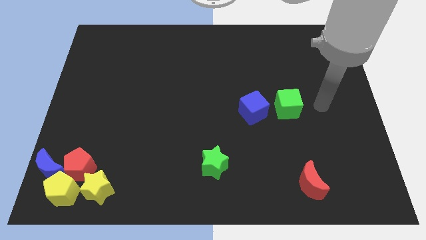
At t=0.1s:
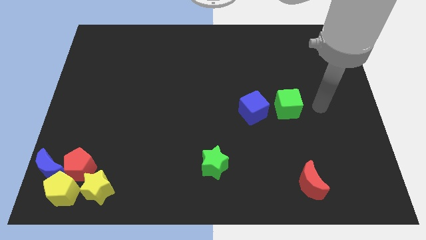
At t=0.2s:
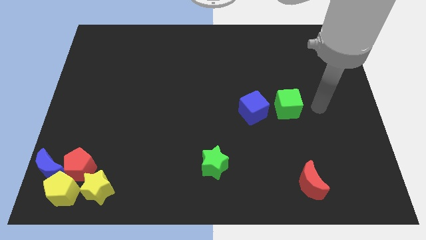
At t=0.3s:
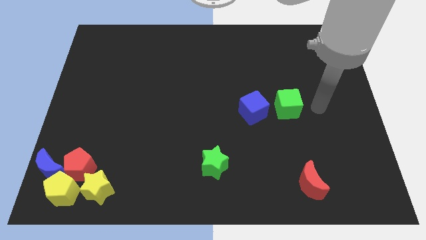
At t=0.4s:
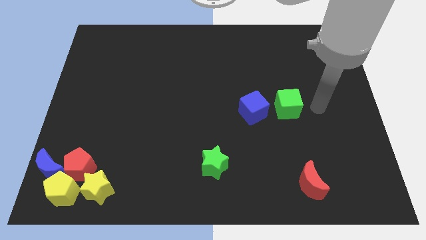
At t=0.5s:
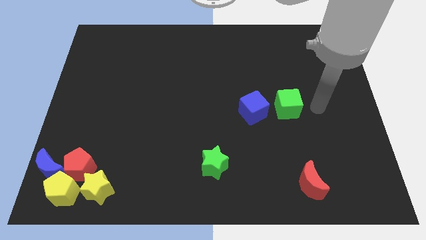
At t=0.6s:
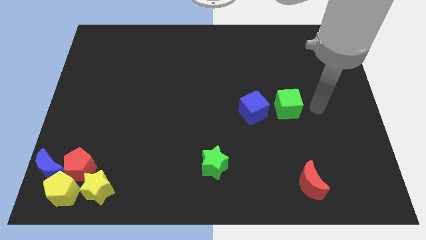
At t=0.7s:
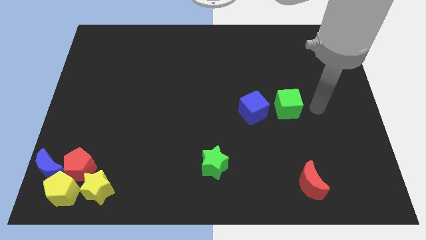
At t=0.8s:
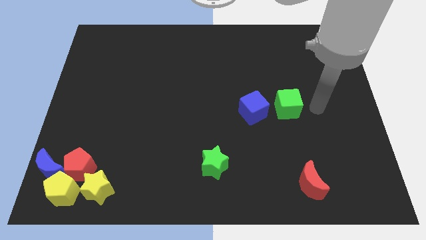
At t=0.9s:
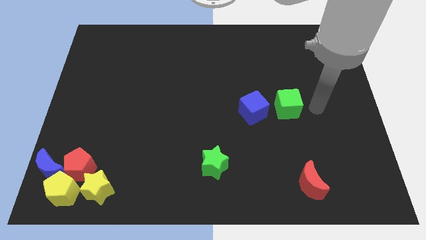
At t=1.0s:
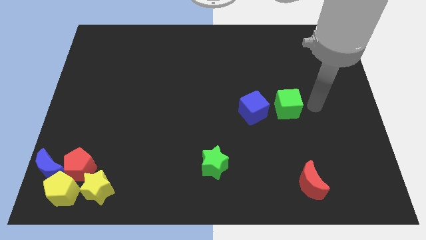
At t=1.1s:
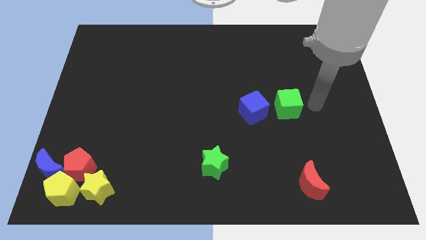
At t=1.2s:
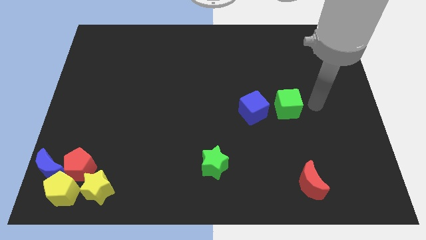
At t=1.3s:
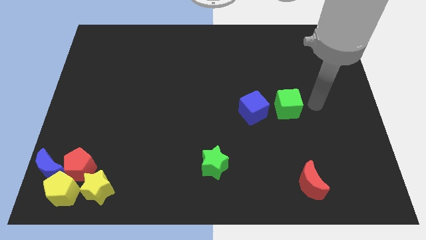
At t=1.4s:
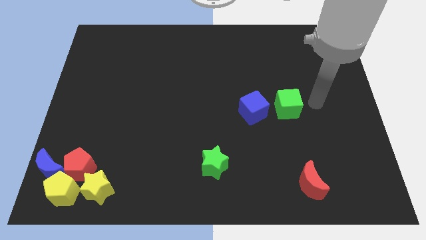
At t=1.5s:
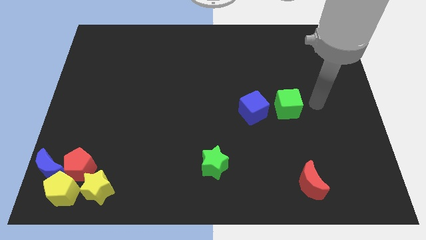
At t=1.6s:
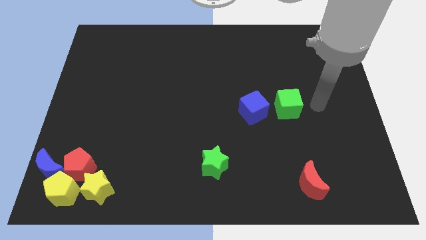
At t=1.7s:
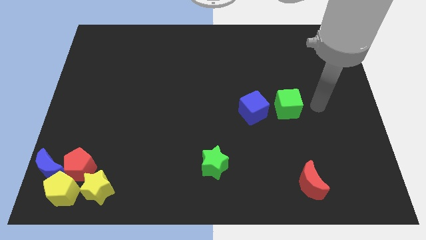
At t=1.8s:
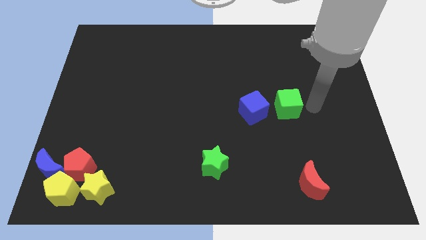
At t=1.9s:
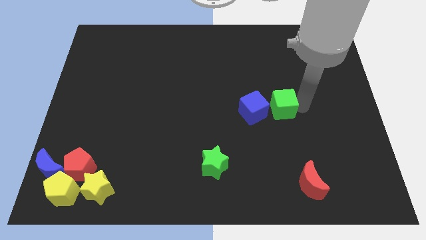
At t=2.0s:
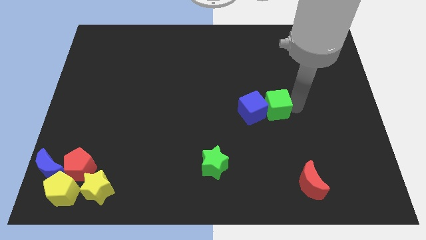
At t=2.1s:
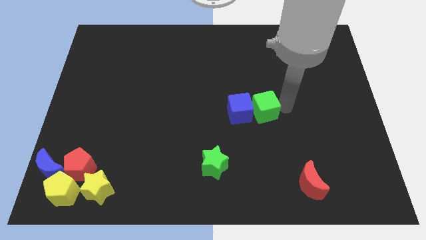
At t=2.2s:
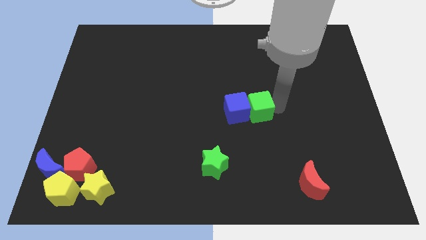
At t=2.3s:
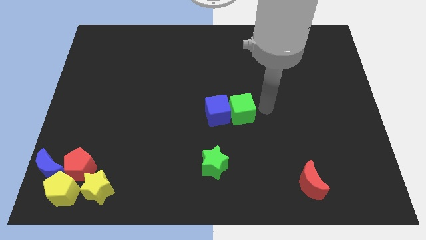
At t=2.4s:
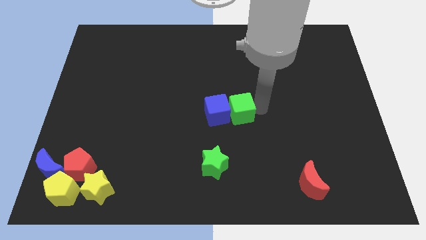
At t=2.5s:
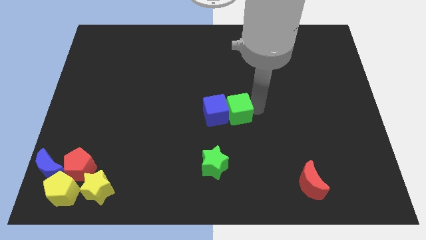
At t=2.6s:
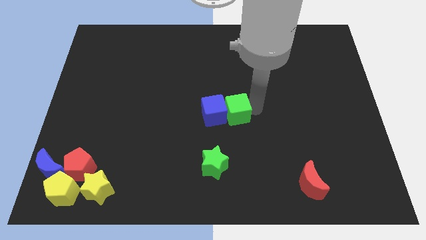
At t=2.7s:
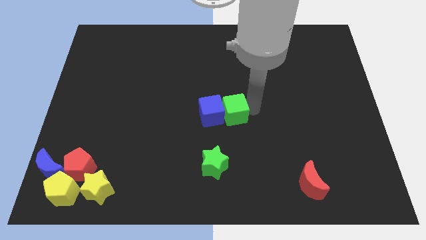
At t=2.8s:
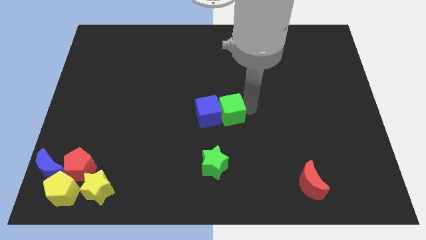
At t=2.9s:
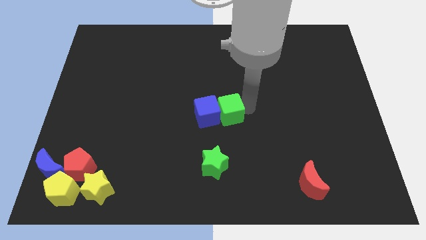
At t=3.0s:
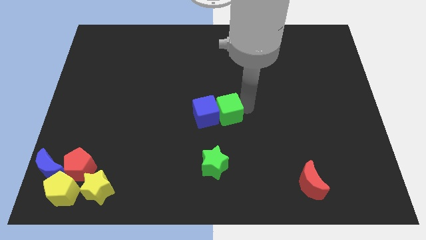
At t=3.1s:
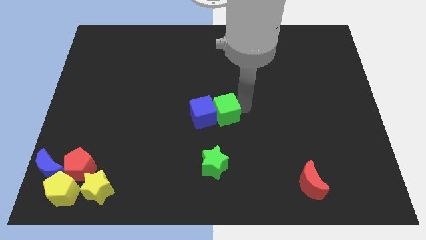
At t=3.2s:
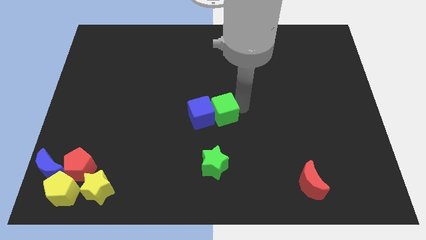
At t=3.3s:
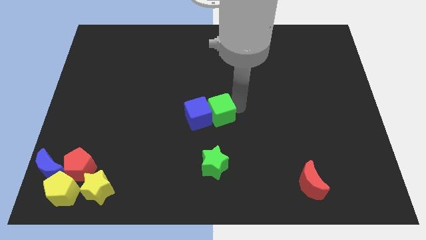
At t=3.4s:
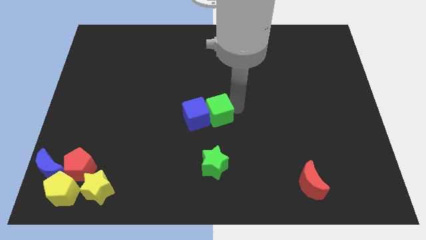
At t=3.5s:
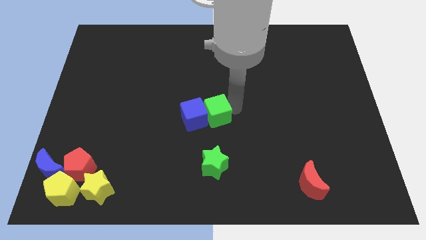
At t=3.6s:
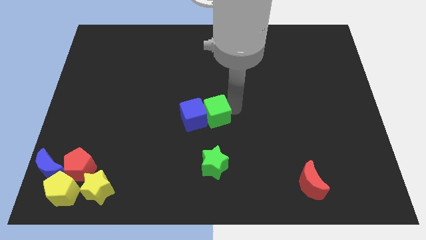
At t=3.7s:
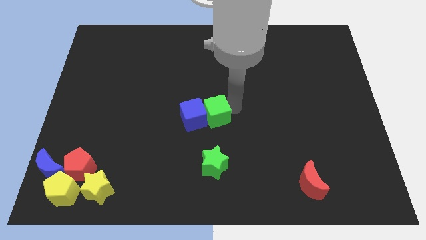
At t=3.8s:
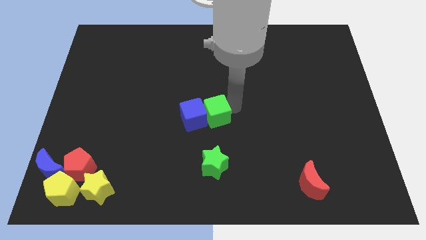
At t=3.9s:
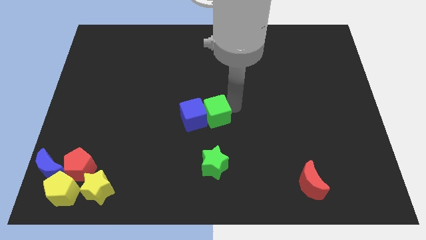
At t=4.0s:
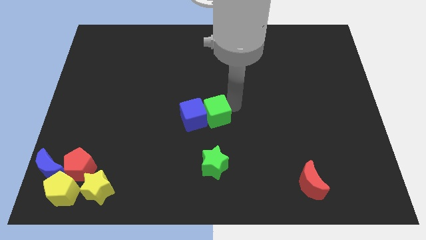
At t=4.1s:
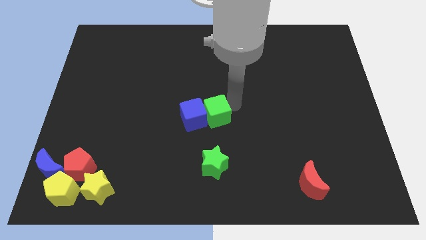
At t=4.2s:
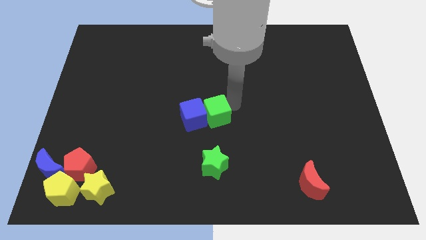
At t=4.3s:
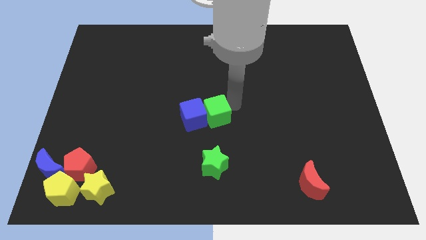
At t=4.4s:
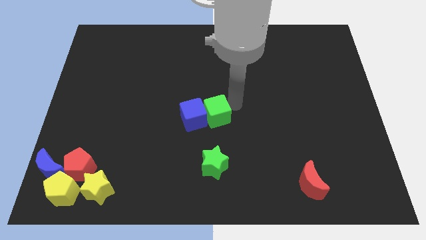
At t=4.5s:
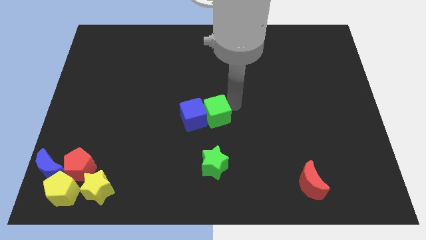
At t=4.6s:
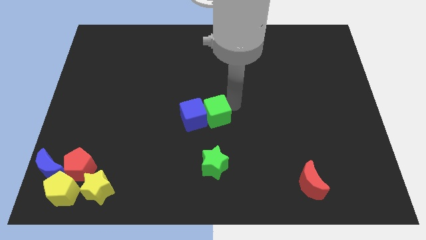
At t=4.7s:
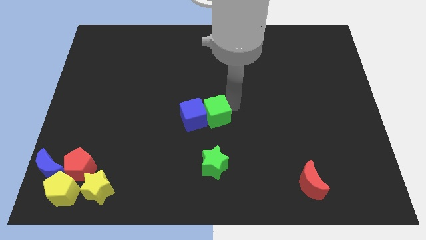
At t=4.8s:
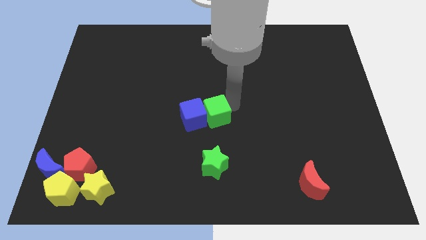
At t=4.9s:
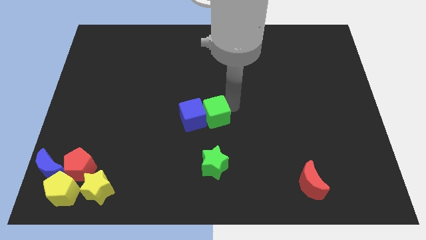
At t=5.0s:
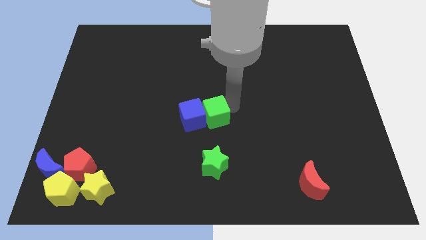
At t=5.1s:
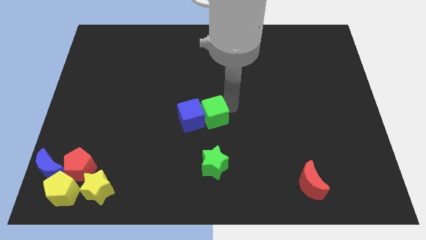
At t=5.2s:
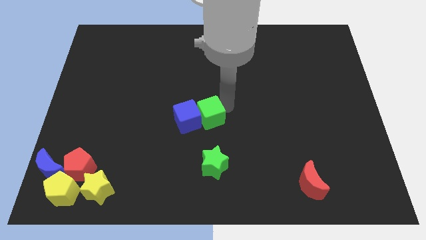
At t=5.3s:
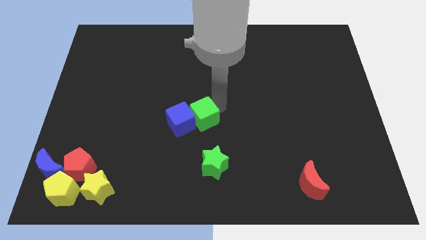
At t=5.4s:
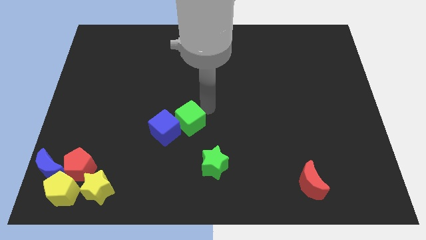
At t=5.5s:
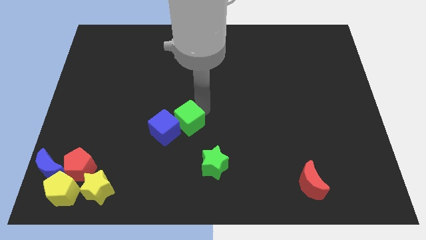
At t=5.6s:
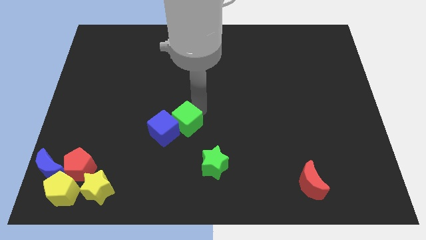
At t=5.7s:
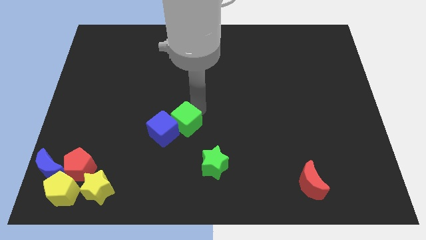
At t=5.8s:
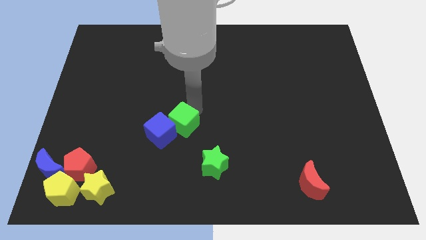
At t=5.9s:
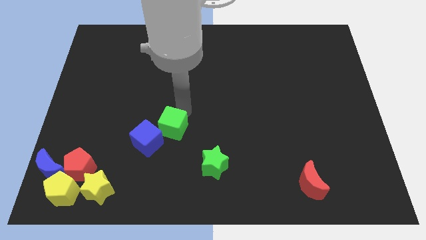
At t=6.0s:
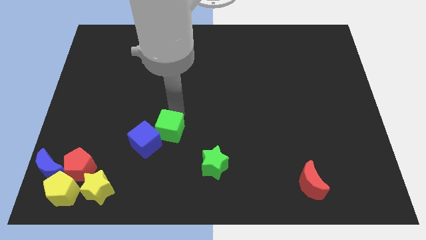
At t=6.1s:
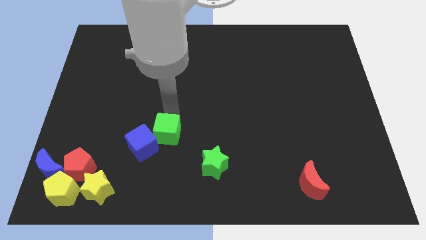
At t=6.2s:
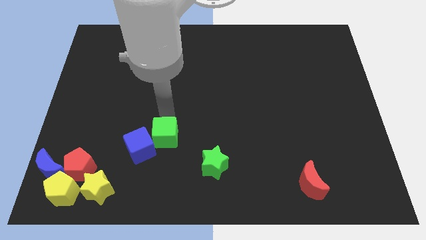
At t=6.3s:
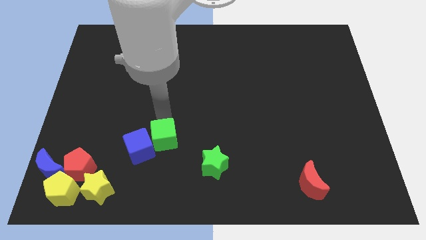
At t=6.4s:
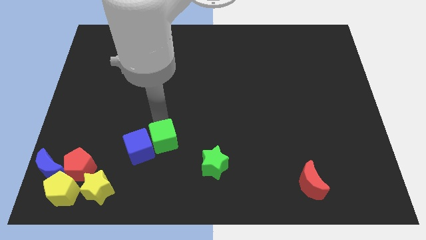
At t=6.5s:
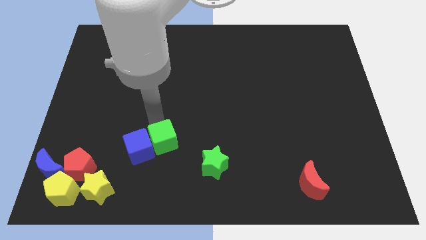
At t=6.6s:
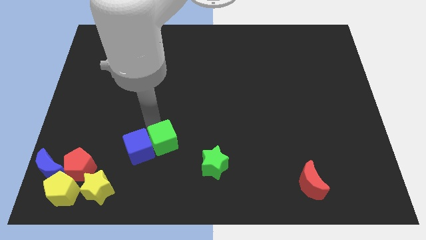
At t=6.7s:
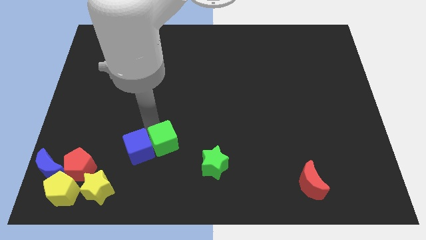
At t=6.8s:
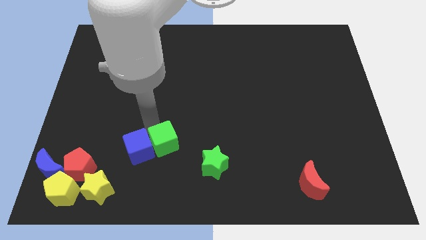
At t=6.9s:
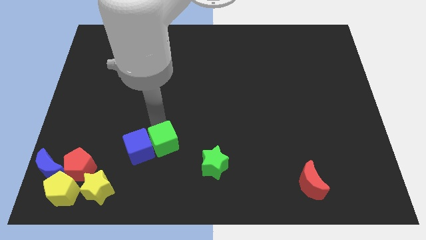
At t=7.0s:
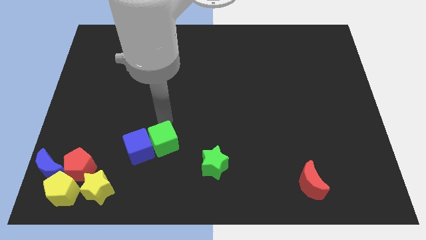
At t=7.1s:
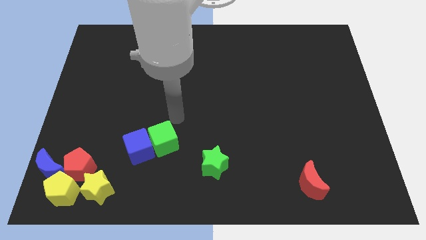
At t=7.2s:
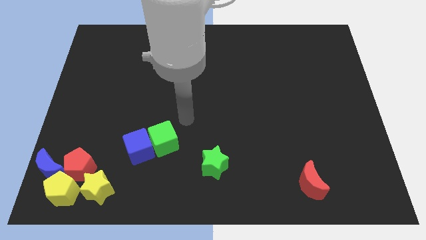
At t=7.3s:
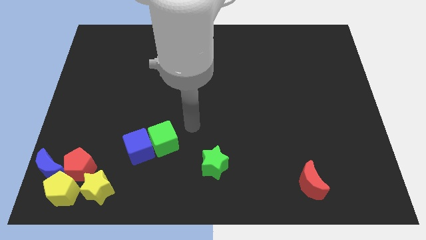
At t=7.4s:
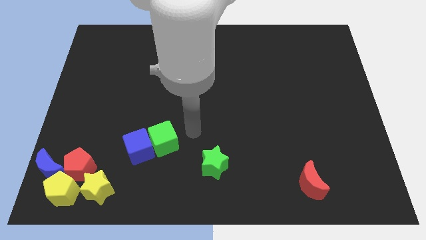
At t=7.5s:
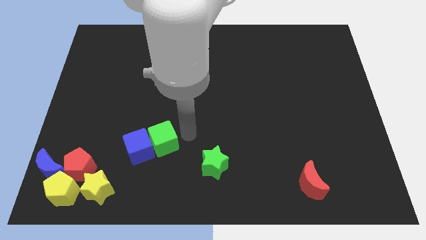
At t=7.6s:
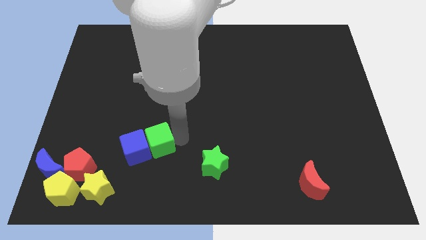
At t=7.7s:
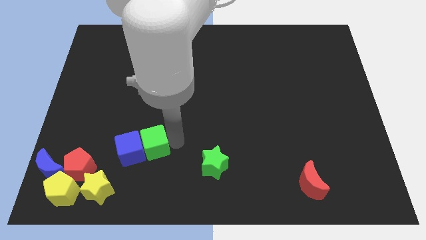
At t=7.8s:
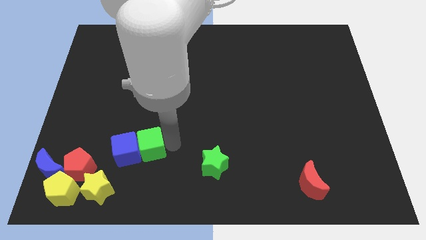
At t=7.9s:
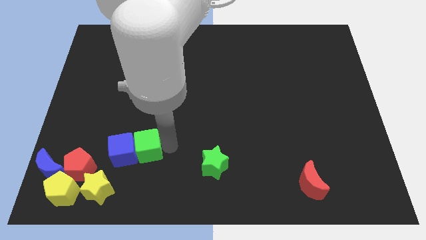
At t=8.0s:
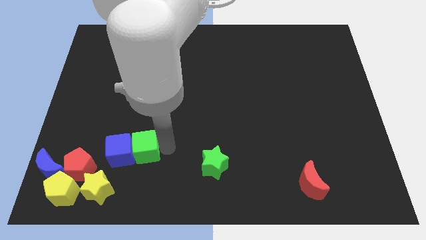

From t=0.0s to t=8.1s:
move the blue and green cubes towards the group of blocks

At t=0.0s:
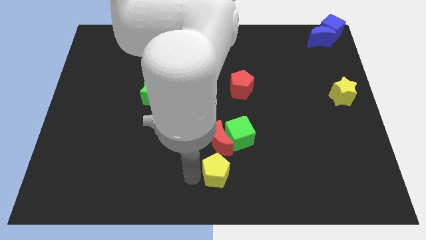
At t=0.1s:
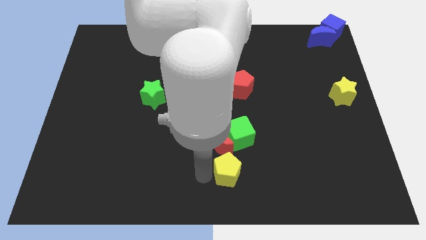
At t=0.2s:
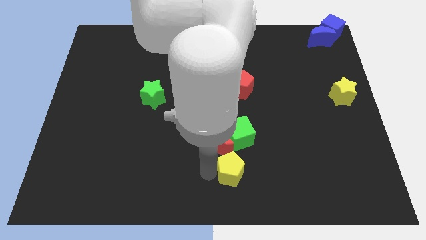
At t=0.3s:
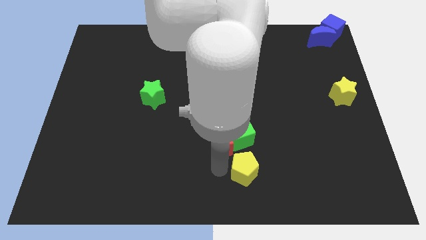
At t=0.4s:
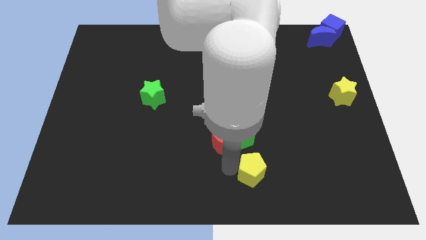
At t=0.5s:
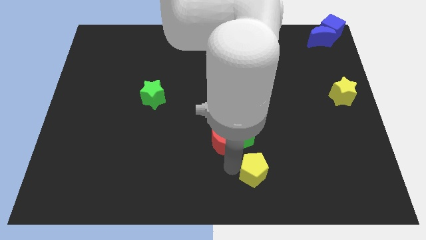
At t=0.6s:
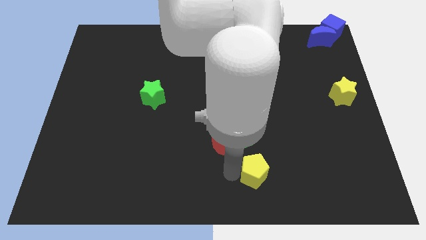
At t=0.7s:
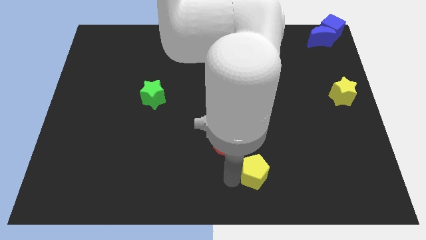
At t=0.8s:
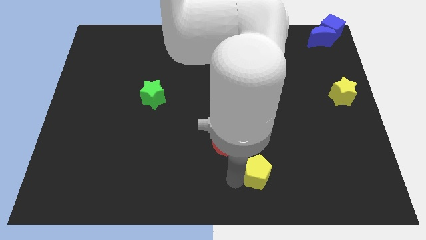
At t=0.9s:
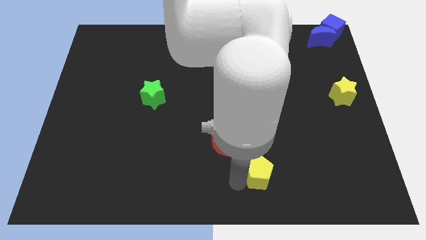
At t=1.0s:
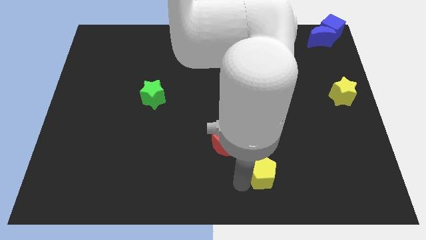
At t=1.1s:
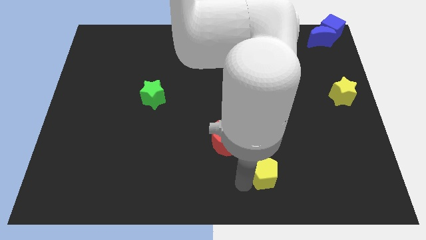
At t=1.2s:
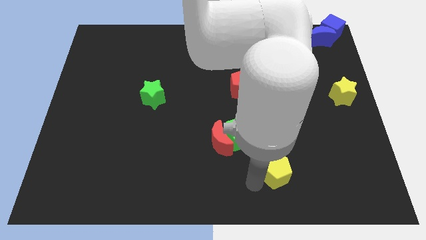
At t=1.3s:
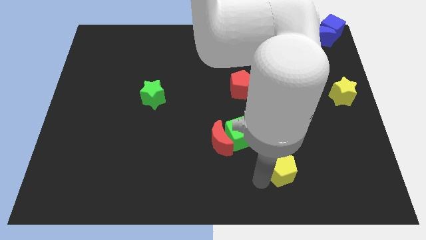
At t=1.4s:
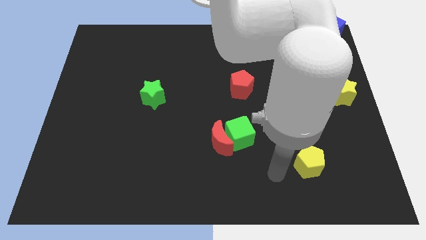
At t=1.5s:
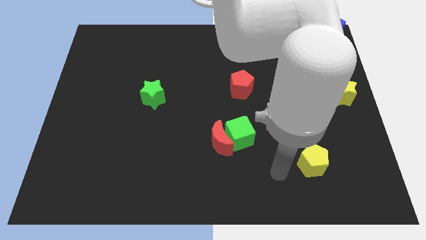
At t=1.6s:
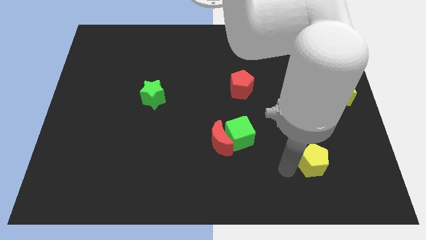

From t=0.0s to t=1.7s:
place the yellow pentagon diagonally bottom right to the green cube
